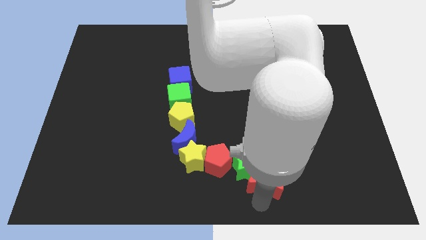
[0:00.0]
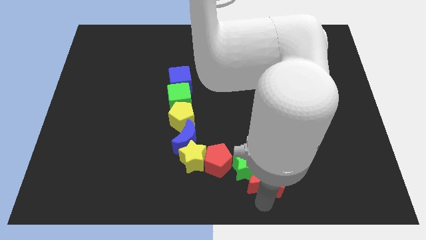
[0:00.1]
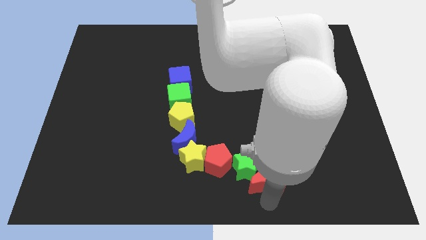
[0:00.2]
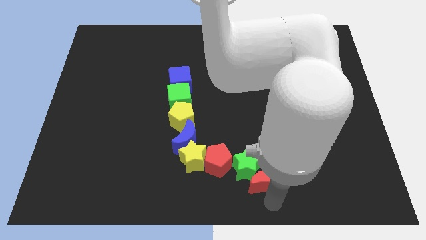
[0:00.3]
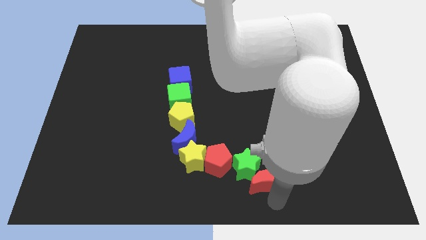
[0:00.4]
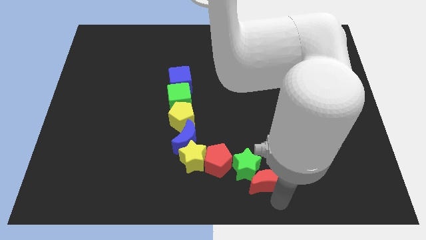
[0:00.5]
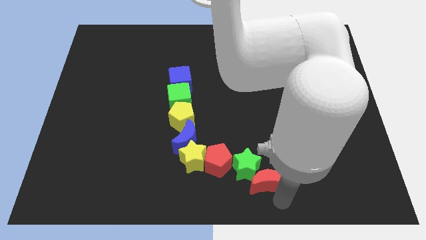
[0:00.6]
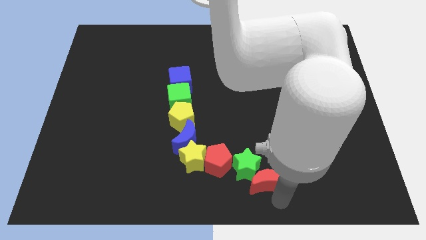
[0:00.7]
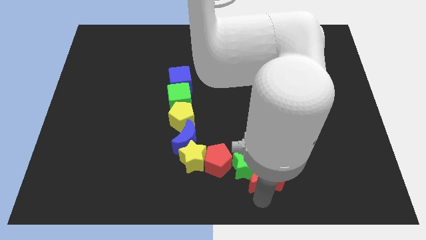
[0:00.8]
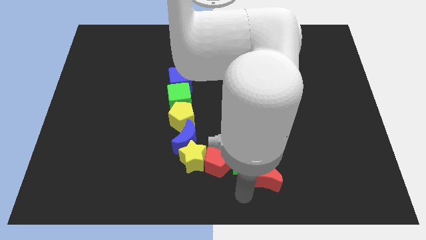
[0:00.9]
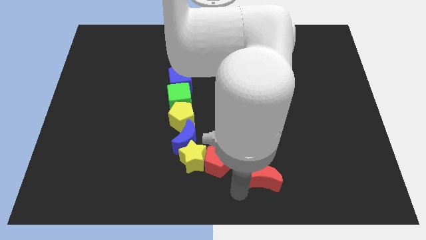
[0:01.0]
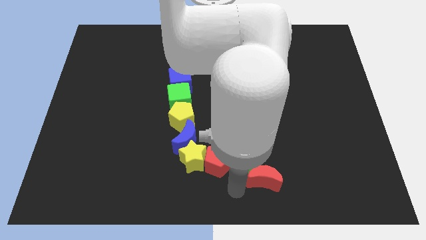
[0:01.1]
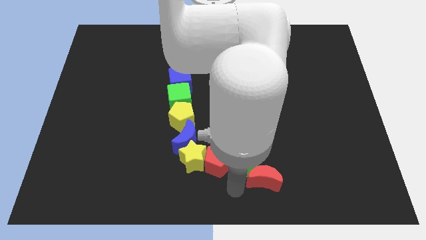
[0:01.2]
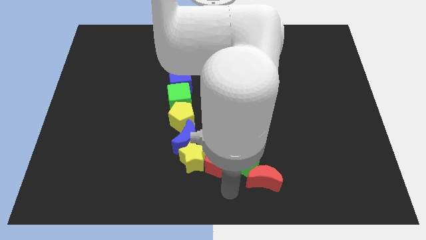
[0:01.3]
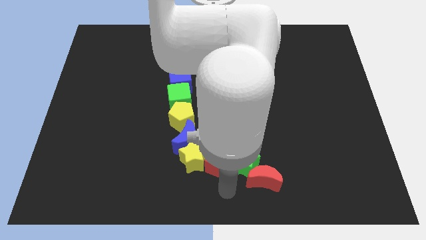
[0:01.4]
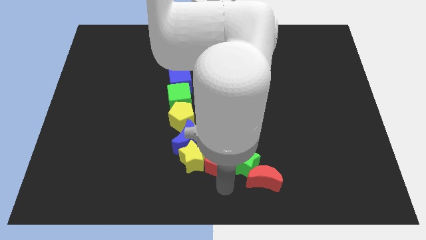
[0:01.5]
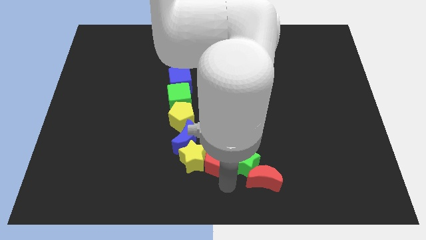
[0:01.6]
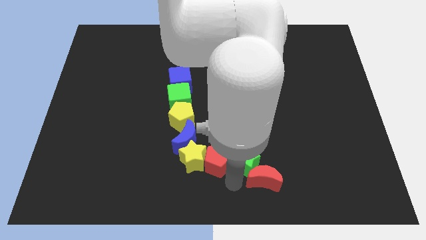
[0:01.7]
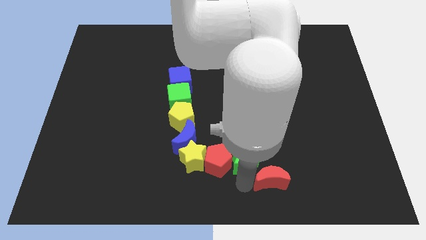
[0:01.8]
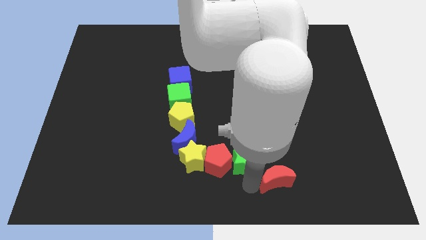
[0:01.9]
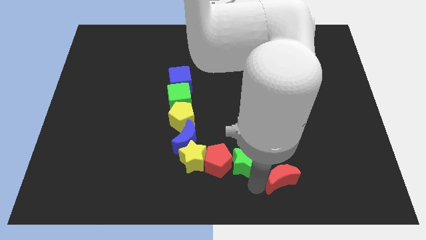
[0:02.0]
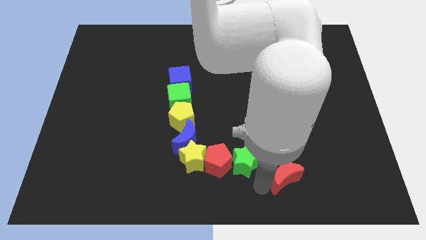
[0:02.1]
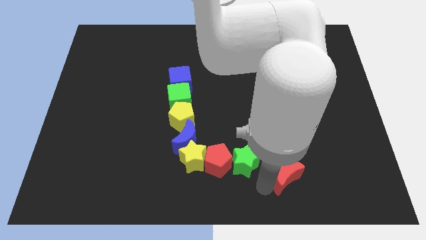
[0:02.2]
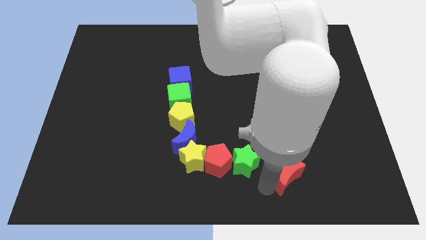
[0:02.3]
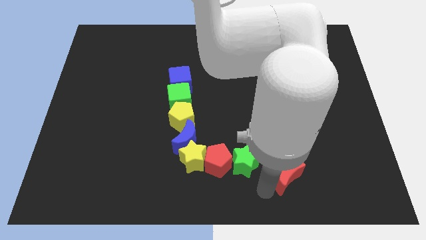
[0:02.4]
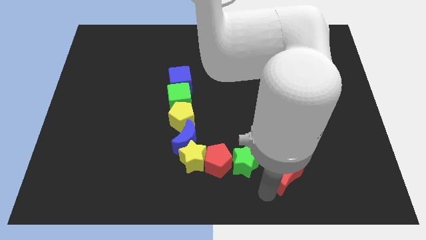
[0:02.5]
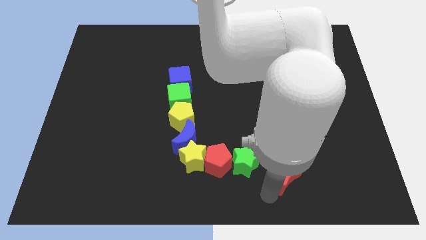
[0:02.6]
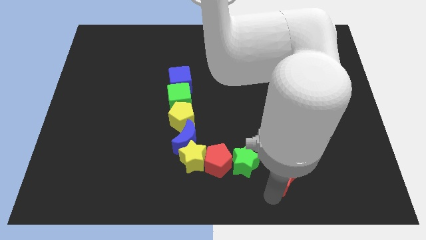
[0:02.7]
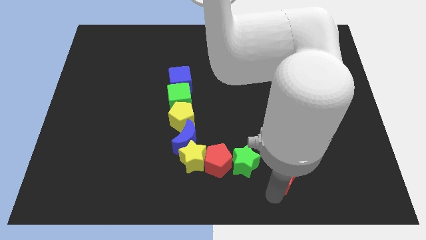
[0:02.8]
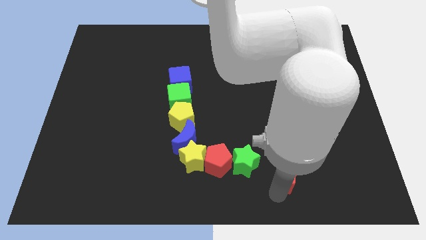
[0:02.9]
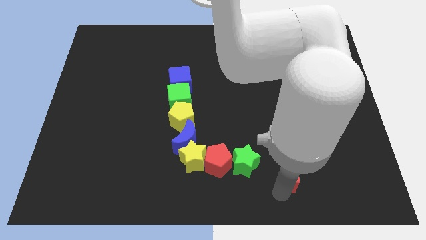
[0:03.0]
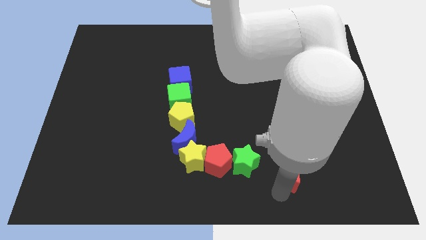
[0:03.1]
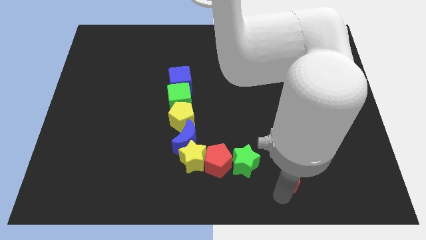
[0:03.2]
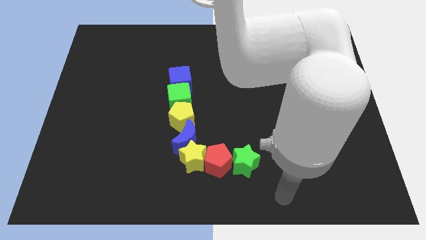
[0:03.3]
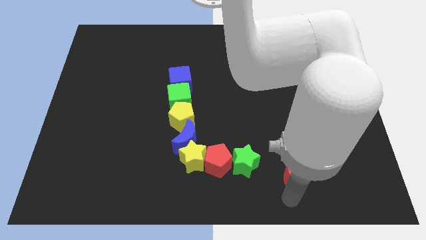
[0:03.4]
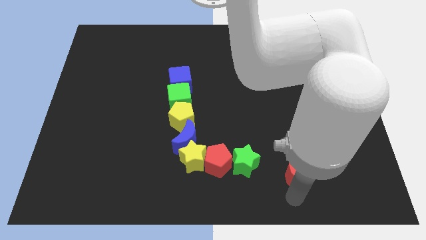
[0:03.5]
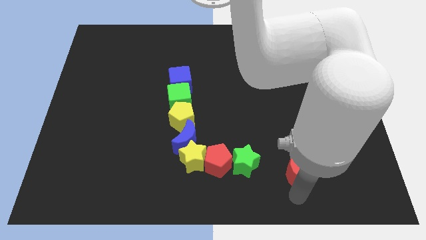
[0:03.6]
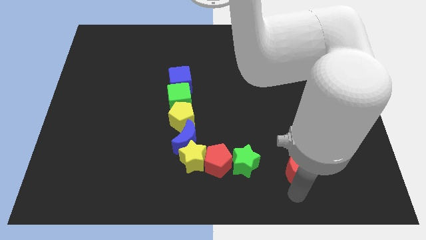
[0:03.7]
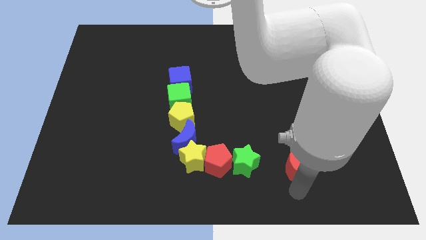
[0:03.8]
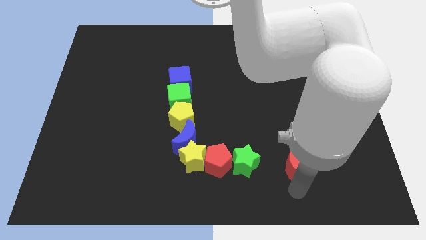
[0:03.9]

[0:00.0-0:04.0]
place the red moon right to the green star

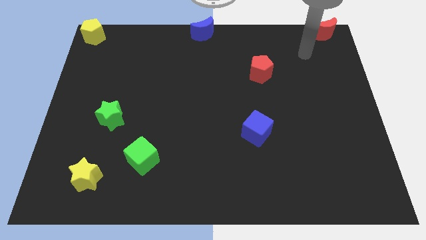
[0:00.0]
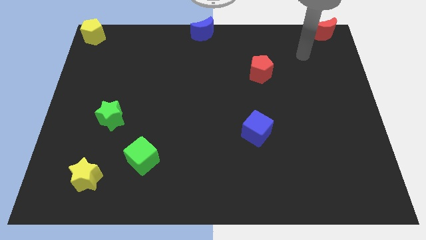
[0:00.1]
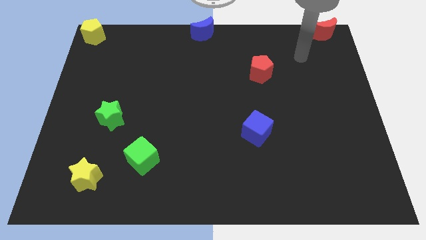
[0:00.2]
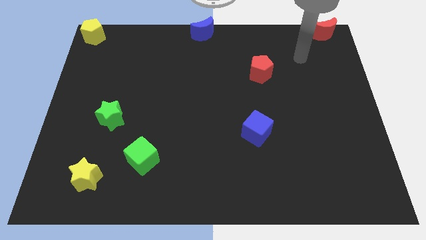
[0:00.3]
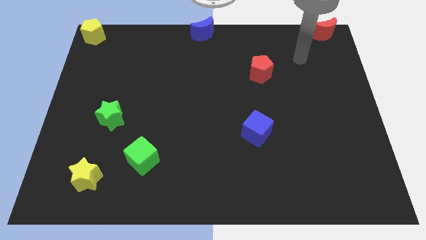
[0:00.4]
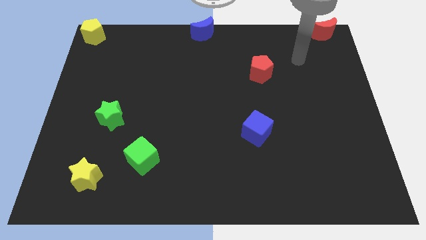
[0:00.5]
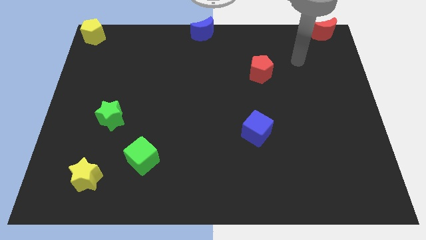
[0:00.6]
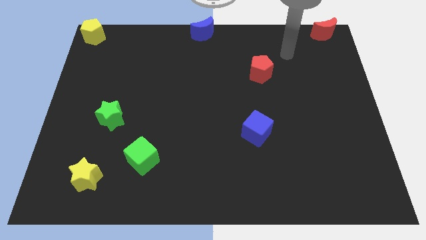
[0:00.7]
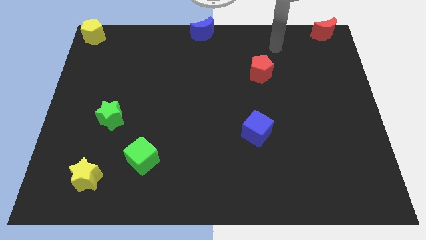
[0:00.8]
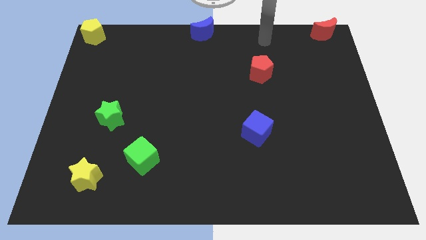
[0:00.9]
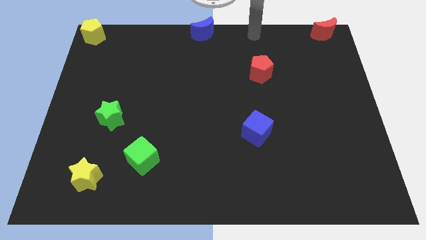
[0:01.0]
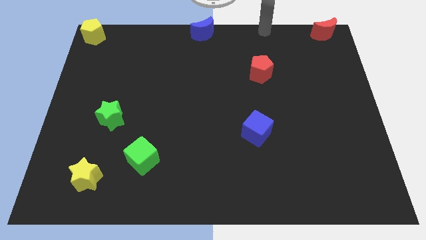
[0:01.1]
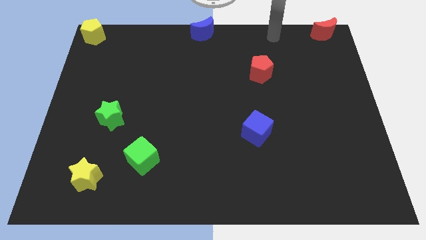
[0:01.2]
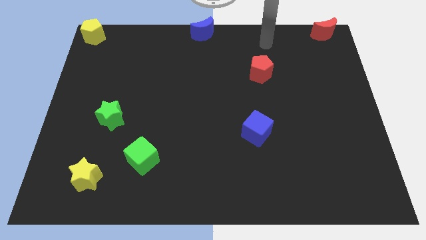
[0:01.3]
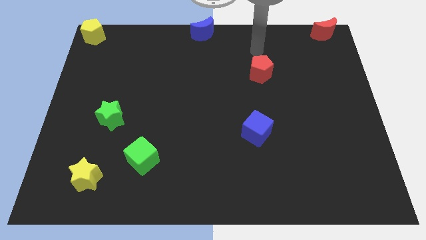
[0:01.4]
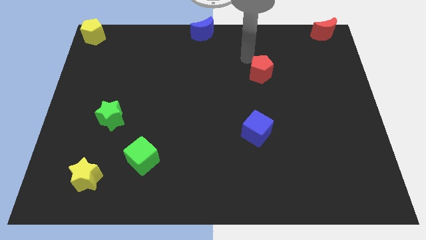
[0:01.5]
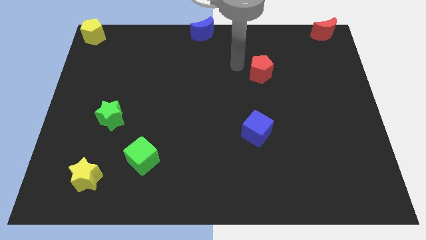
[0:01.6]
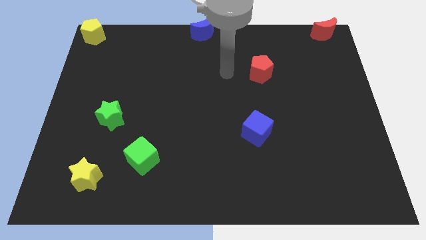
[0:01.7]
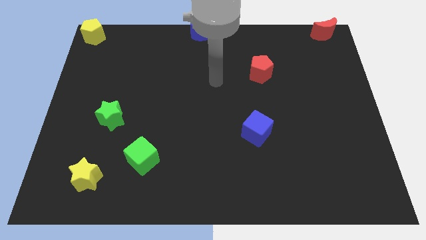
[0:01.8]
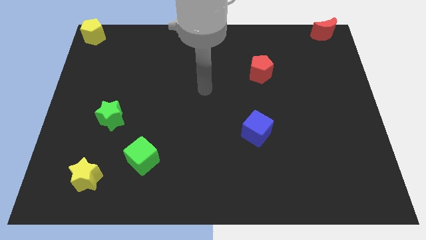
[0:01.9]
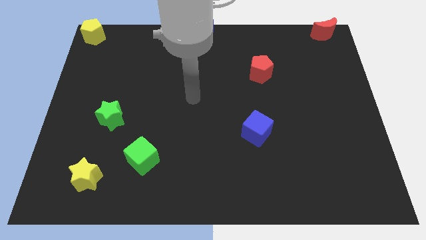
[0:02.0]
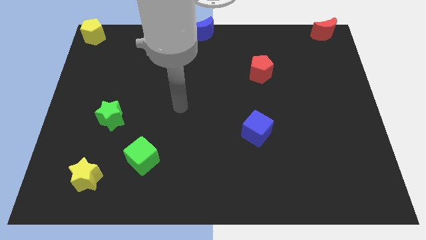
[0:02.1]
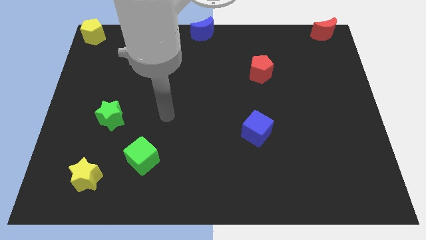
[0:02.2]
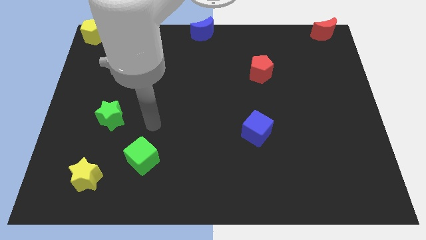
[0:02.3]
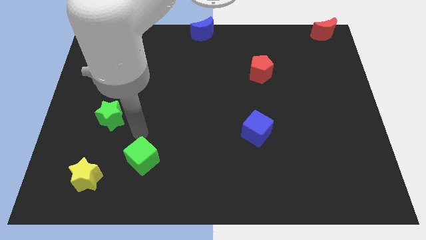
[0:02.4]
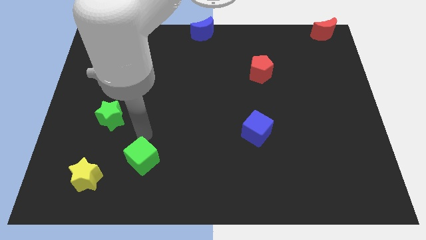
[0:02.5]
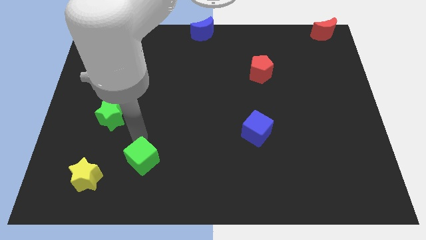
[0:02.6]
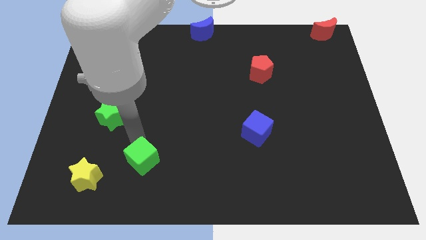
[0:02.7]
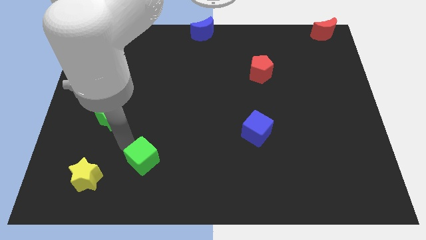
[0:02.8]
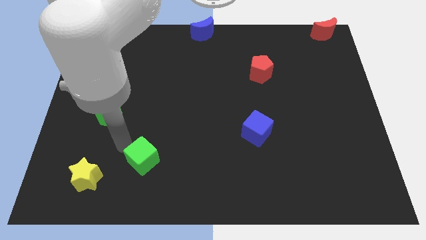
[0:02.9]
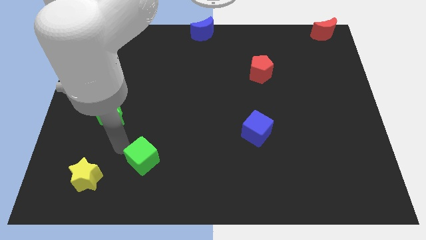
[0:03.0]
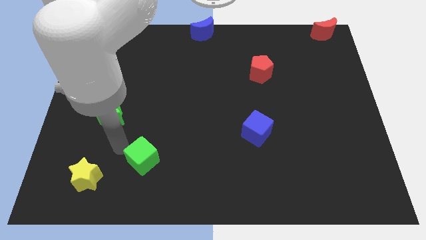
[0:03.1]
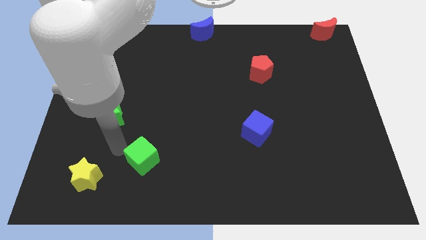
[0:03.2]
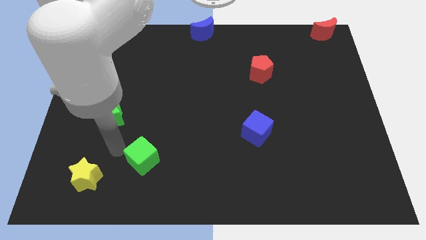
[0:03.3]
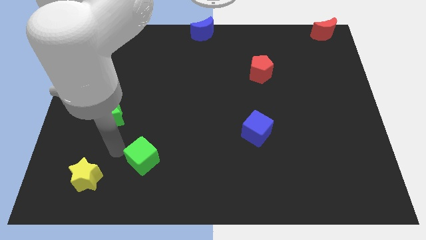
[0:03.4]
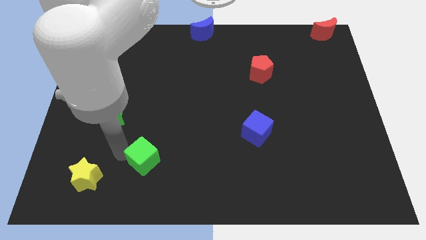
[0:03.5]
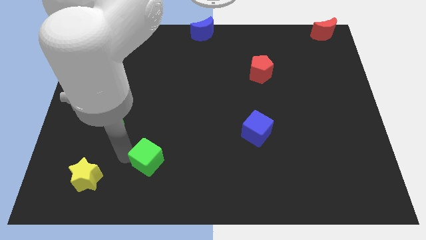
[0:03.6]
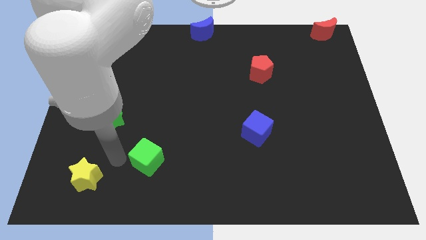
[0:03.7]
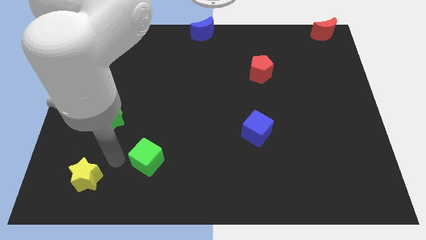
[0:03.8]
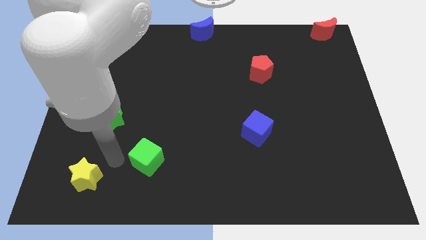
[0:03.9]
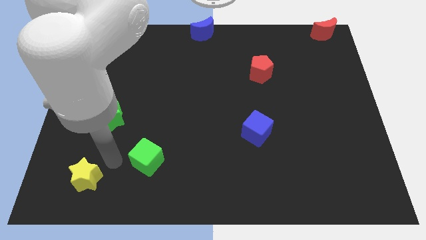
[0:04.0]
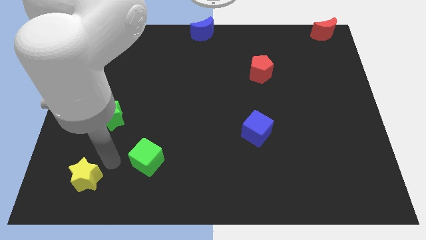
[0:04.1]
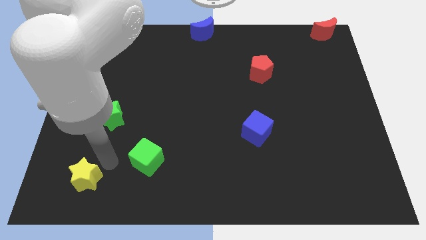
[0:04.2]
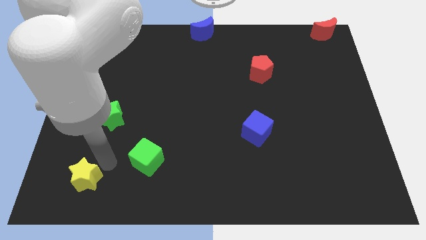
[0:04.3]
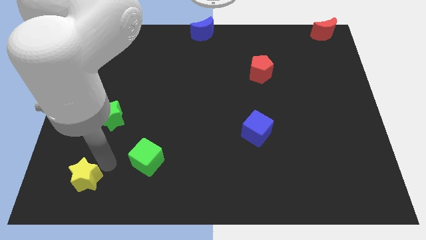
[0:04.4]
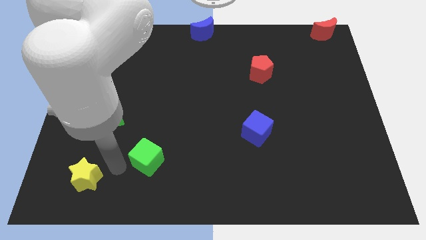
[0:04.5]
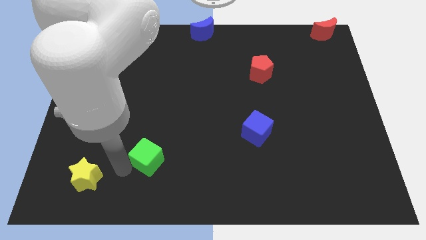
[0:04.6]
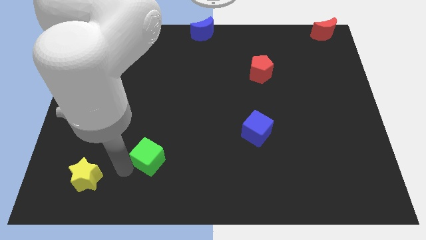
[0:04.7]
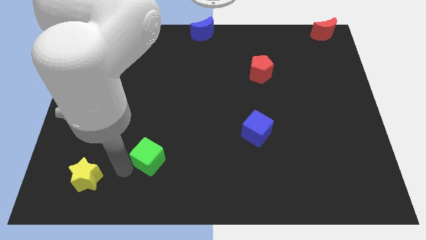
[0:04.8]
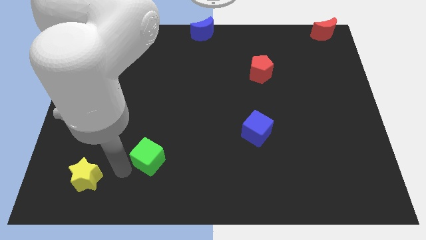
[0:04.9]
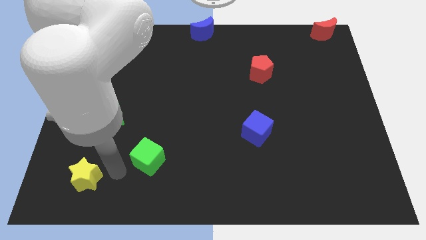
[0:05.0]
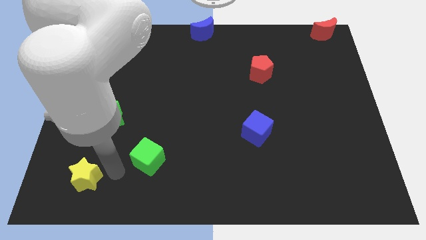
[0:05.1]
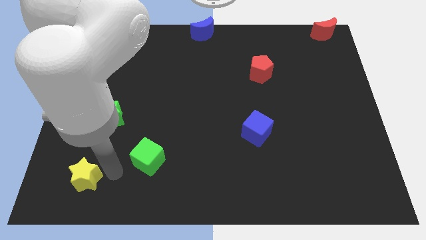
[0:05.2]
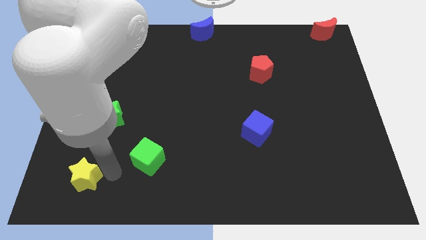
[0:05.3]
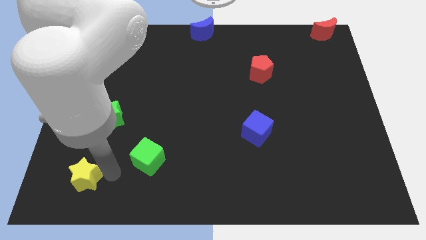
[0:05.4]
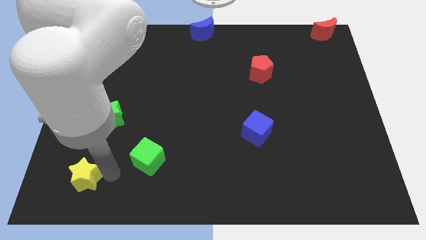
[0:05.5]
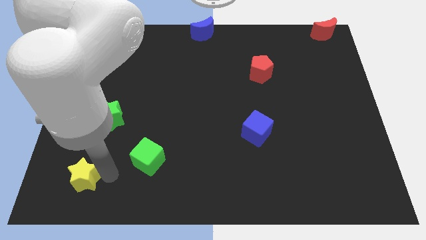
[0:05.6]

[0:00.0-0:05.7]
place your arm towards the right side of the yellow star
